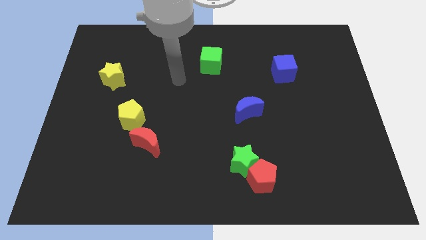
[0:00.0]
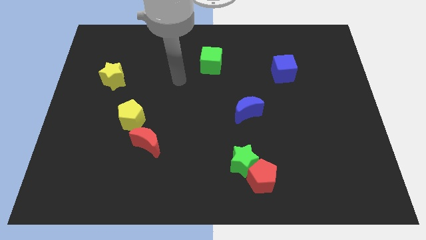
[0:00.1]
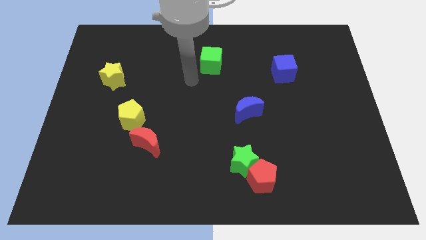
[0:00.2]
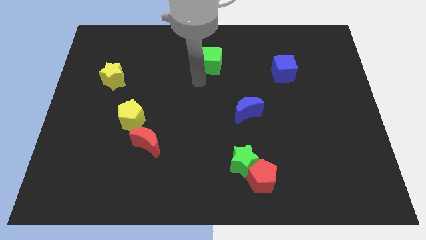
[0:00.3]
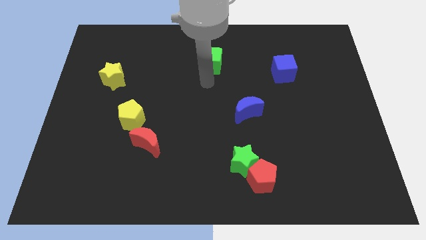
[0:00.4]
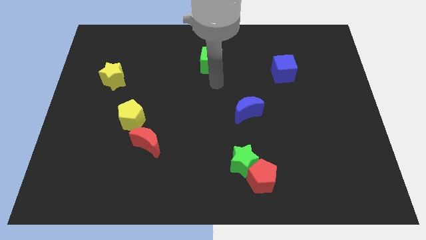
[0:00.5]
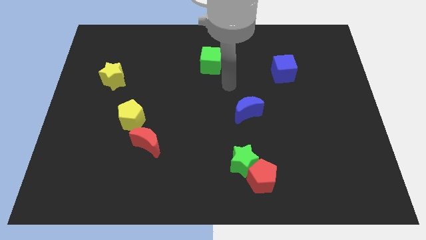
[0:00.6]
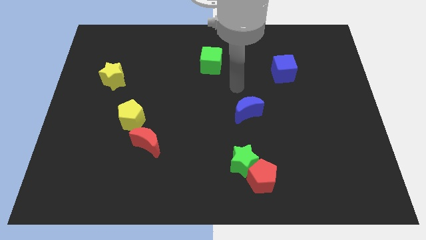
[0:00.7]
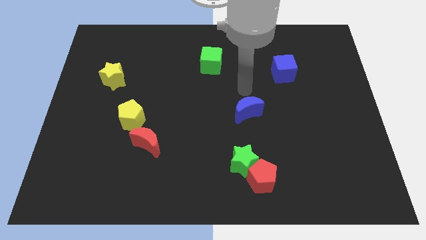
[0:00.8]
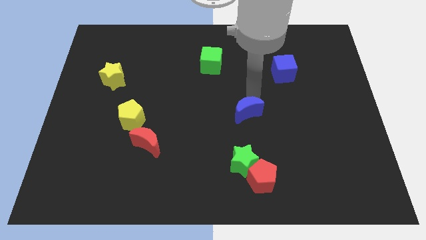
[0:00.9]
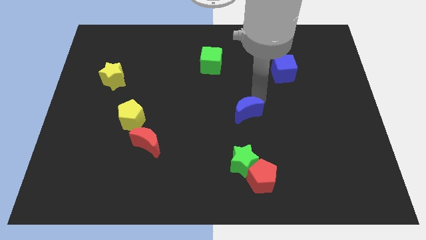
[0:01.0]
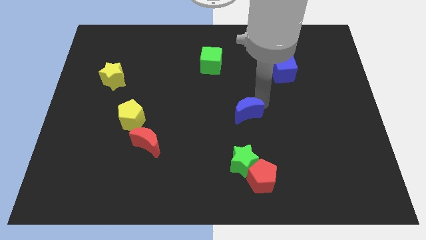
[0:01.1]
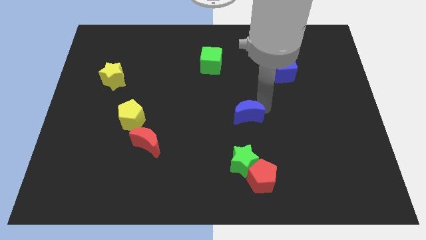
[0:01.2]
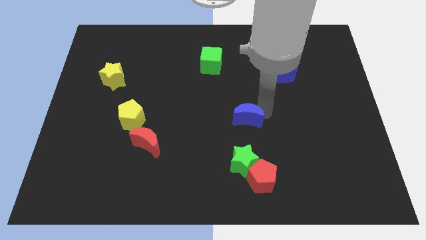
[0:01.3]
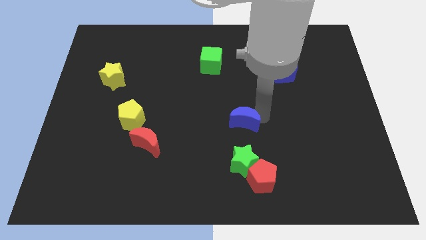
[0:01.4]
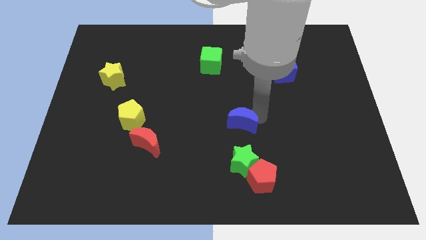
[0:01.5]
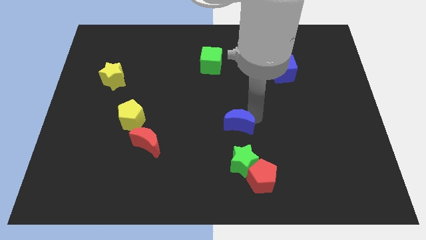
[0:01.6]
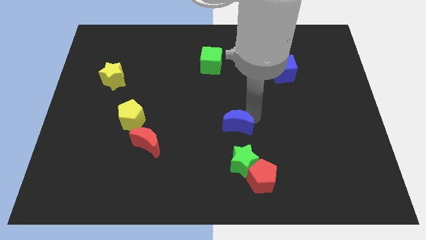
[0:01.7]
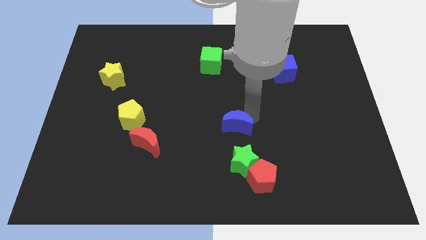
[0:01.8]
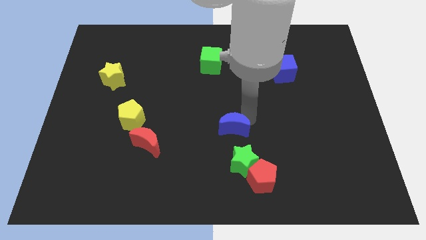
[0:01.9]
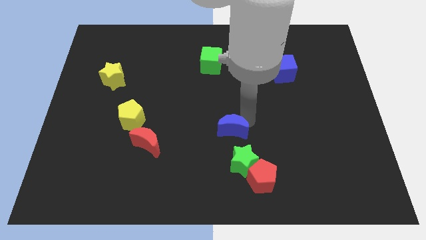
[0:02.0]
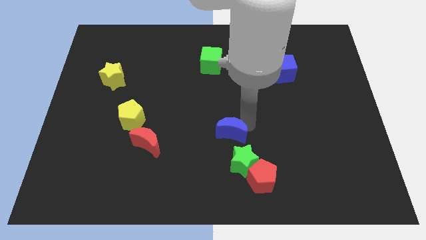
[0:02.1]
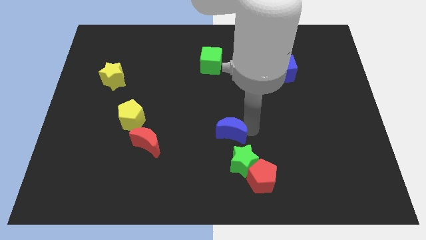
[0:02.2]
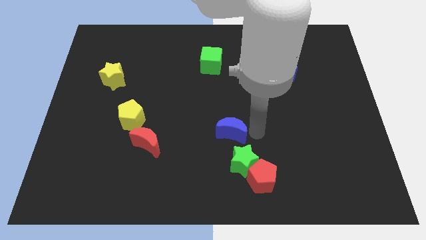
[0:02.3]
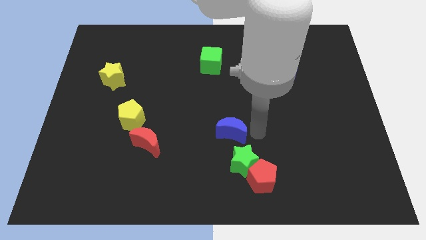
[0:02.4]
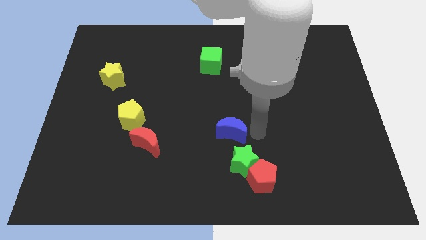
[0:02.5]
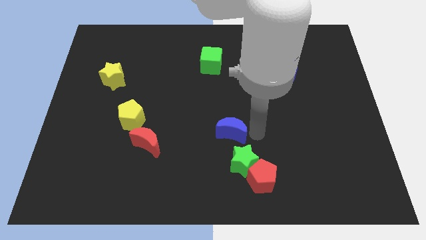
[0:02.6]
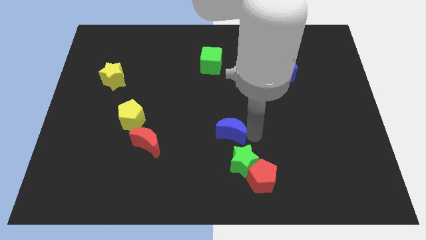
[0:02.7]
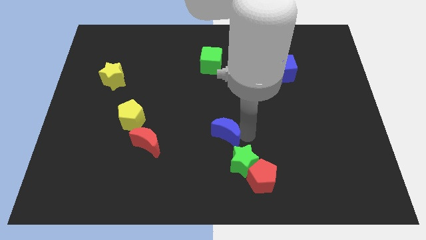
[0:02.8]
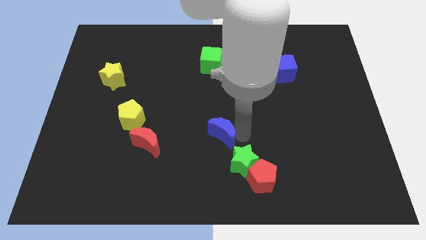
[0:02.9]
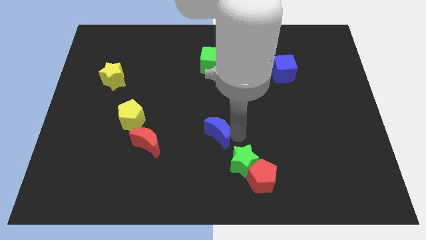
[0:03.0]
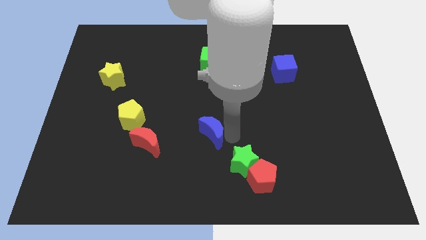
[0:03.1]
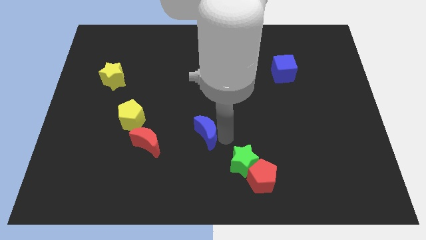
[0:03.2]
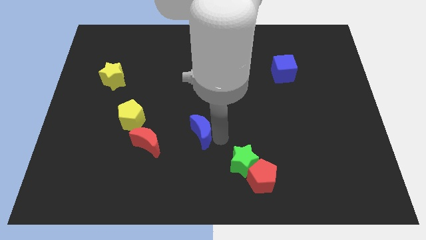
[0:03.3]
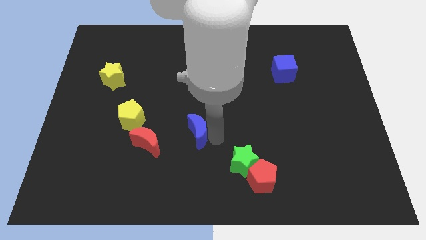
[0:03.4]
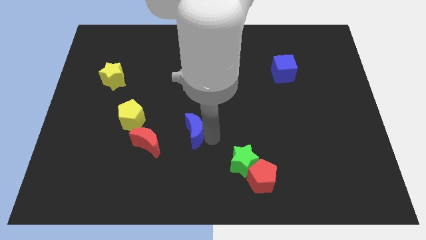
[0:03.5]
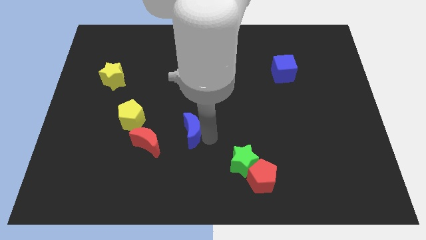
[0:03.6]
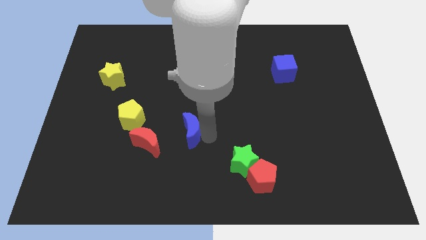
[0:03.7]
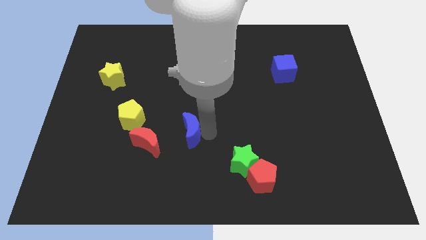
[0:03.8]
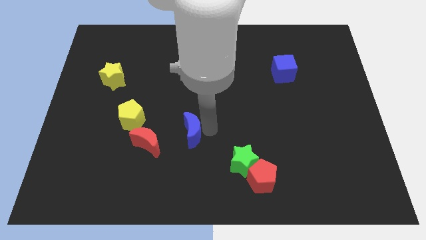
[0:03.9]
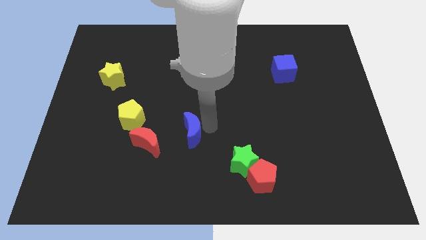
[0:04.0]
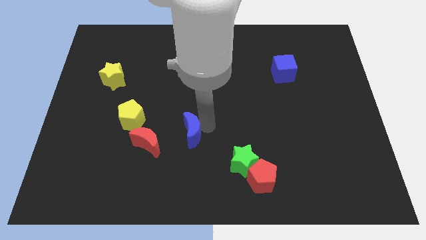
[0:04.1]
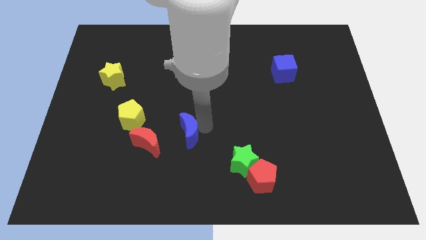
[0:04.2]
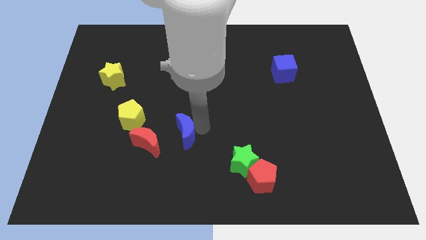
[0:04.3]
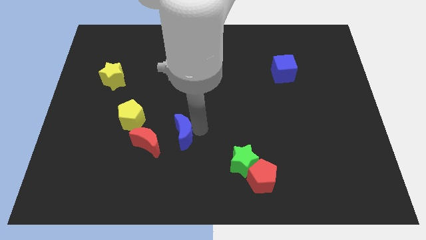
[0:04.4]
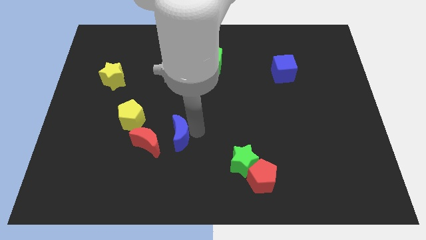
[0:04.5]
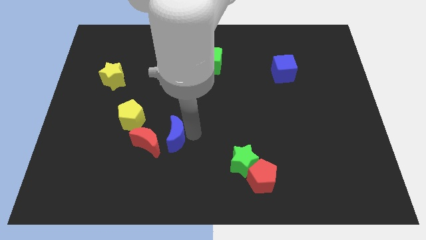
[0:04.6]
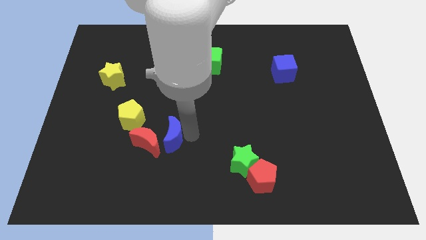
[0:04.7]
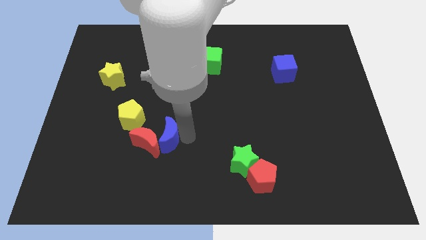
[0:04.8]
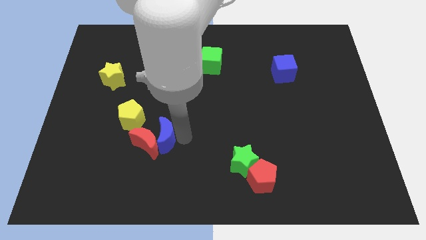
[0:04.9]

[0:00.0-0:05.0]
put the blue moon close to the red moon

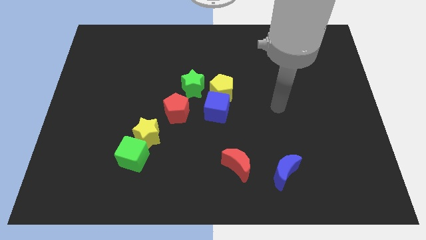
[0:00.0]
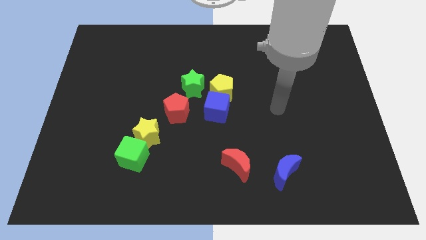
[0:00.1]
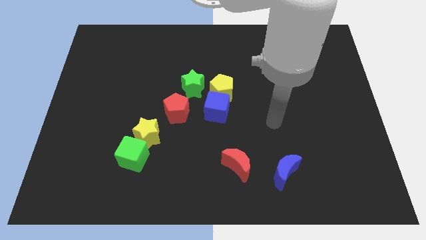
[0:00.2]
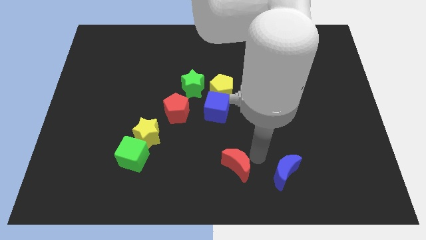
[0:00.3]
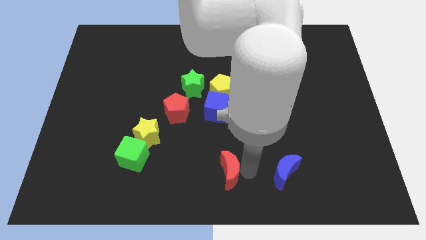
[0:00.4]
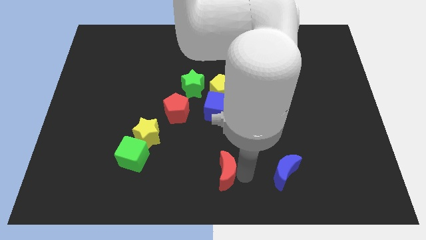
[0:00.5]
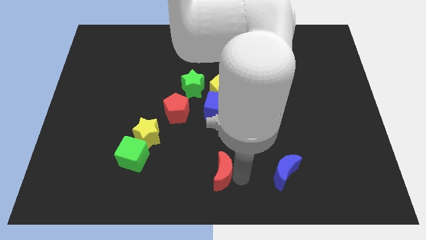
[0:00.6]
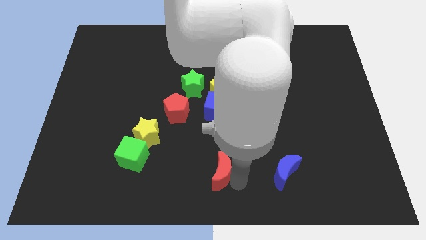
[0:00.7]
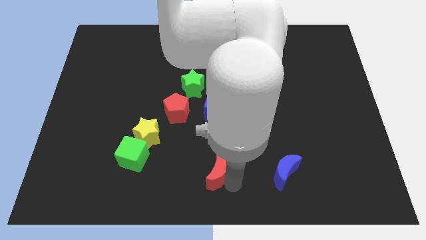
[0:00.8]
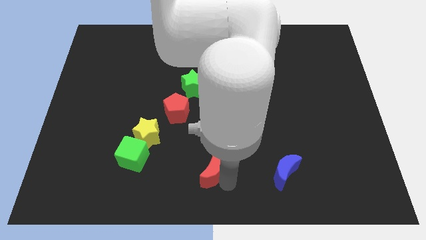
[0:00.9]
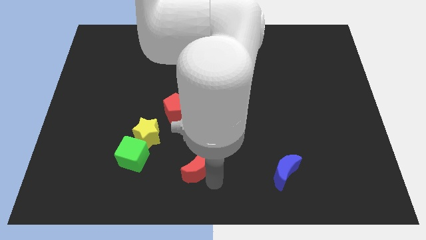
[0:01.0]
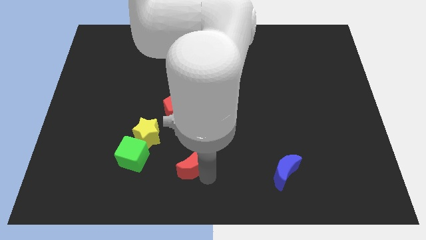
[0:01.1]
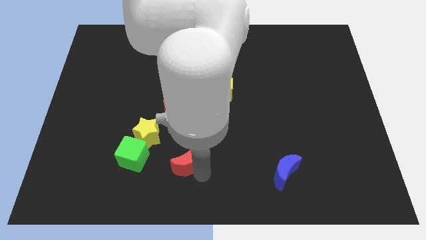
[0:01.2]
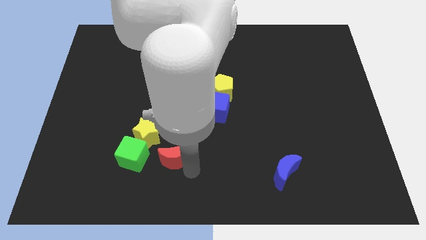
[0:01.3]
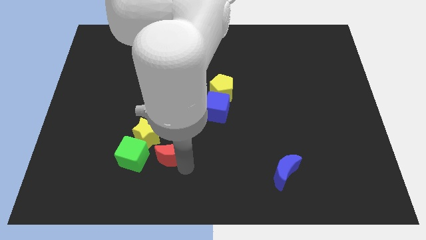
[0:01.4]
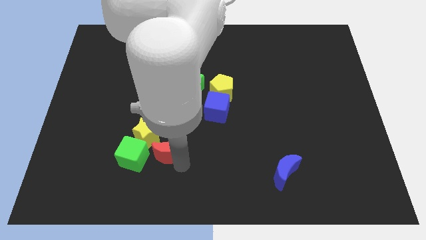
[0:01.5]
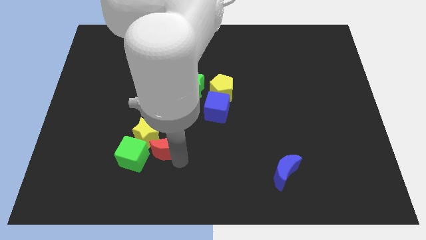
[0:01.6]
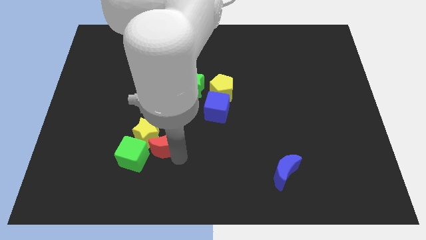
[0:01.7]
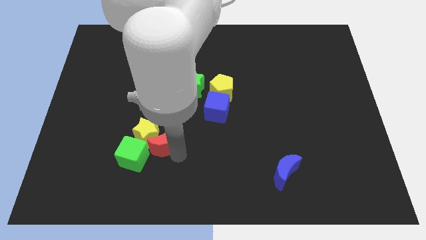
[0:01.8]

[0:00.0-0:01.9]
slide the red moon towards the yellow star

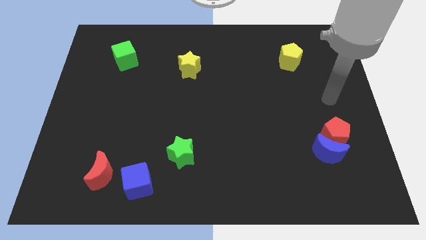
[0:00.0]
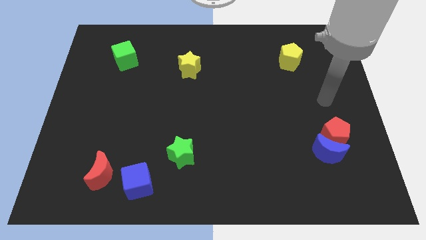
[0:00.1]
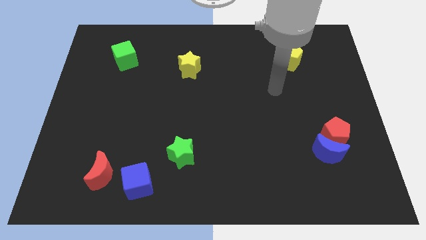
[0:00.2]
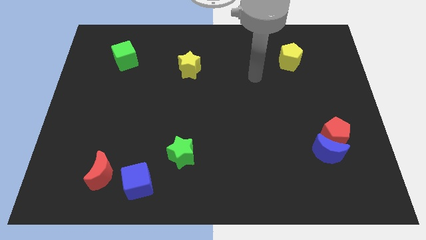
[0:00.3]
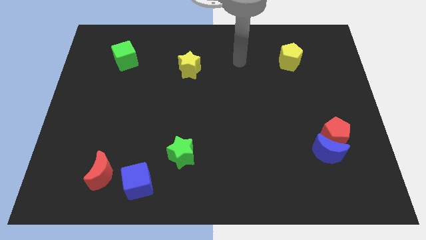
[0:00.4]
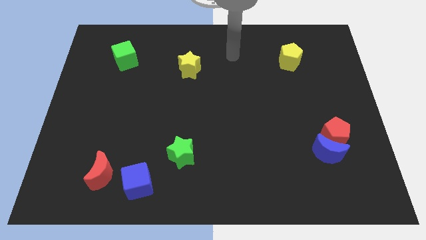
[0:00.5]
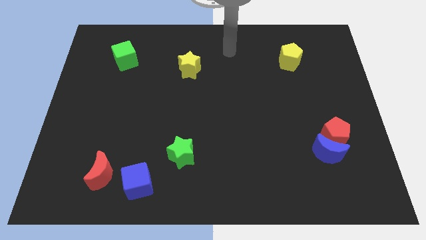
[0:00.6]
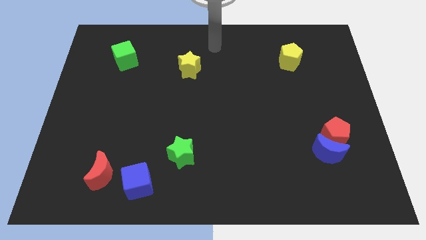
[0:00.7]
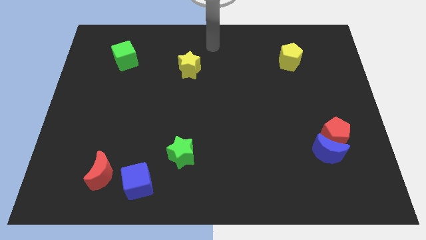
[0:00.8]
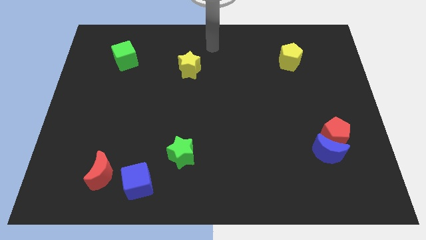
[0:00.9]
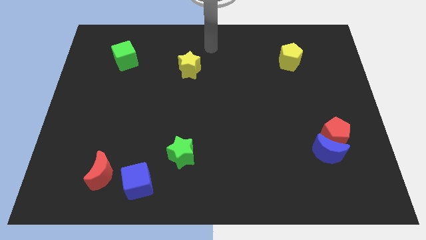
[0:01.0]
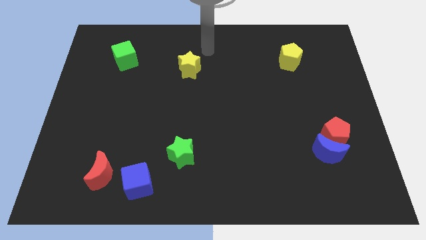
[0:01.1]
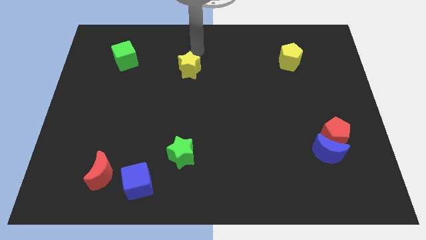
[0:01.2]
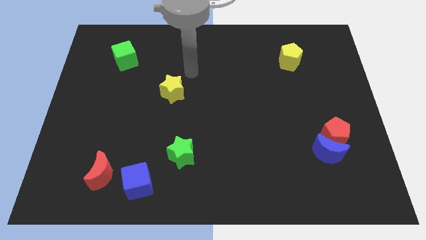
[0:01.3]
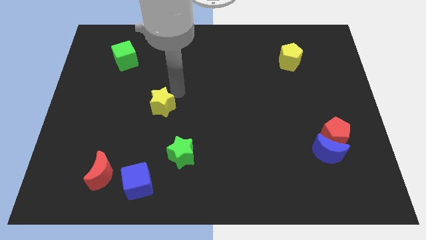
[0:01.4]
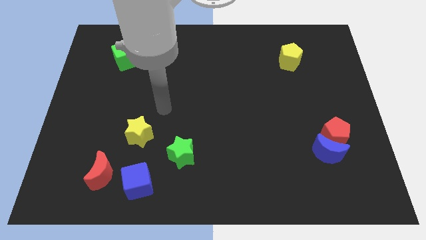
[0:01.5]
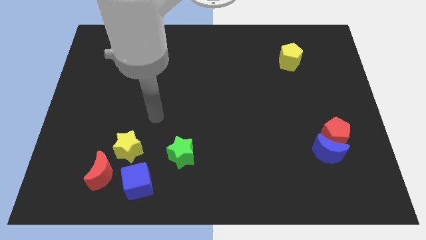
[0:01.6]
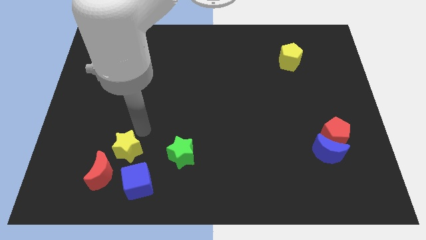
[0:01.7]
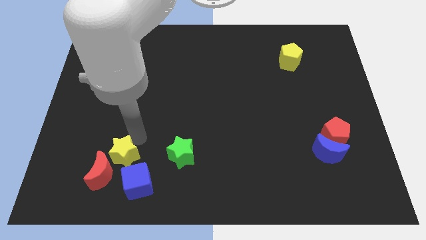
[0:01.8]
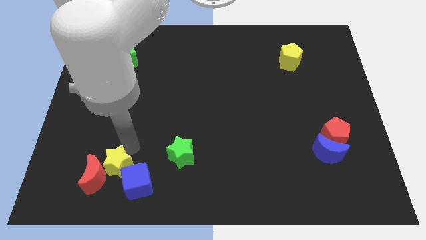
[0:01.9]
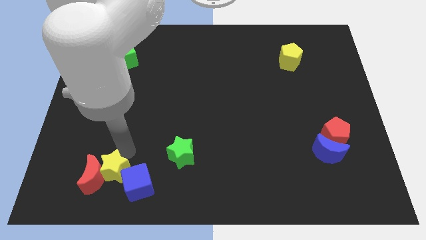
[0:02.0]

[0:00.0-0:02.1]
push the yellow star next to the red moon
